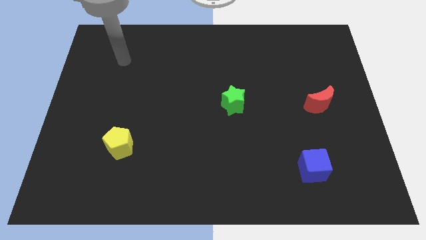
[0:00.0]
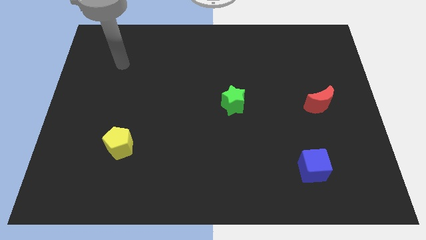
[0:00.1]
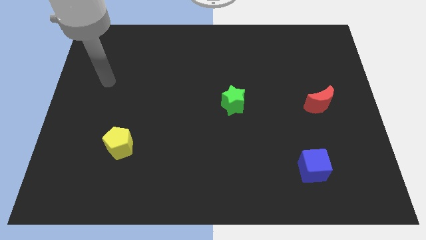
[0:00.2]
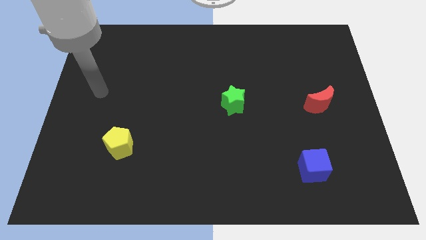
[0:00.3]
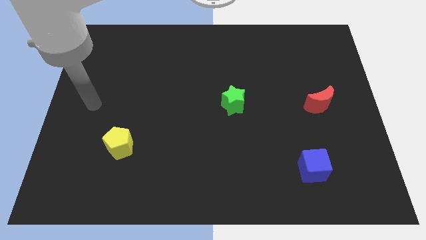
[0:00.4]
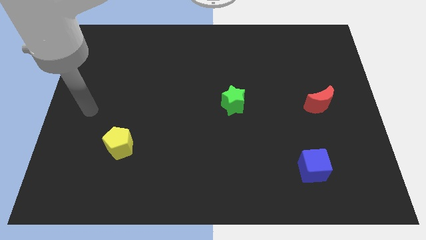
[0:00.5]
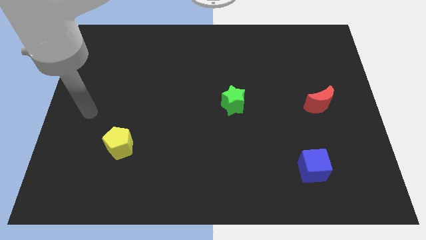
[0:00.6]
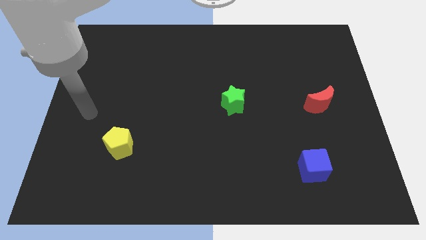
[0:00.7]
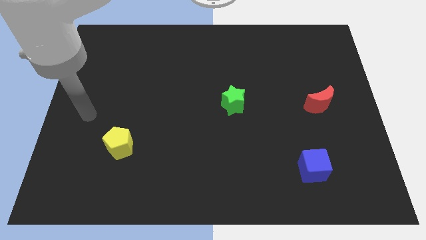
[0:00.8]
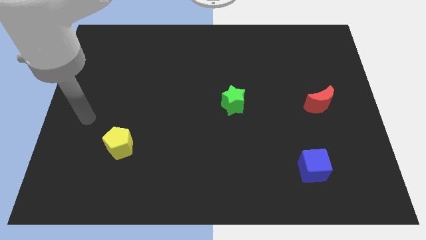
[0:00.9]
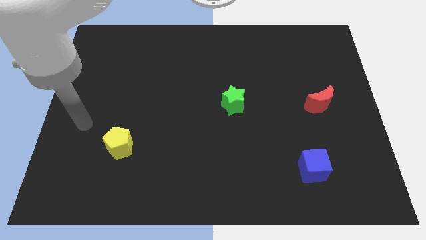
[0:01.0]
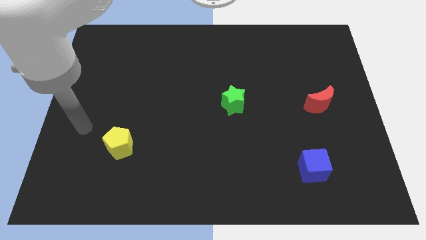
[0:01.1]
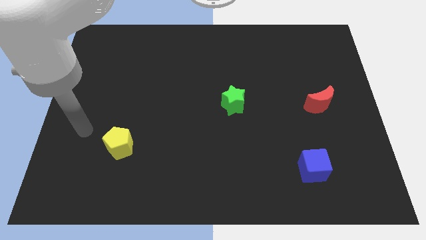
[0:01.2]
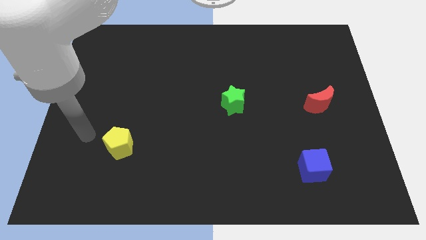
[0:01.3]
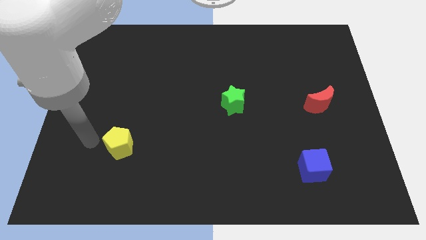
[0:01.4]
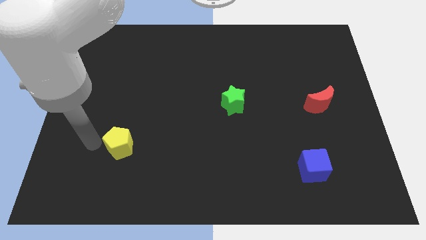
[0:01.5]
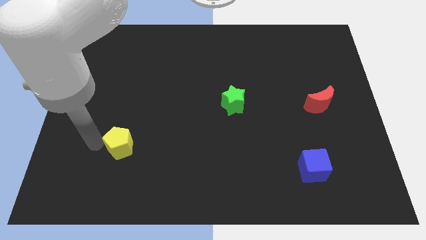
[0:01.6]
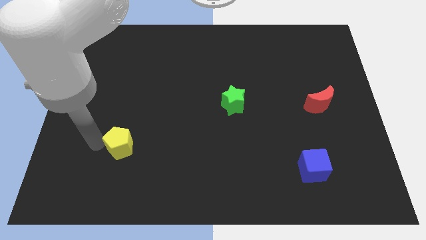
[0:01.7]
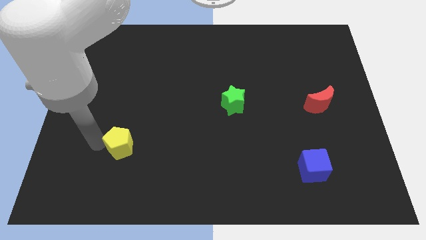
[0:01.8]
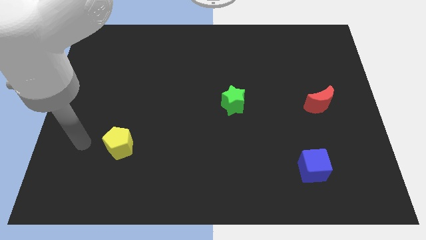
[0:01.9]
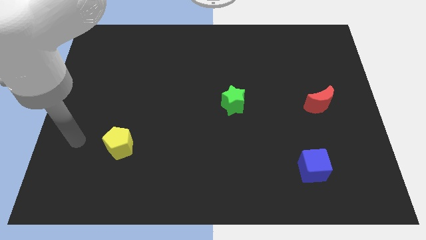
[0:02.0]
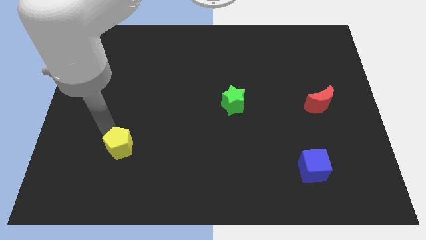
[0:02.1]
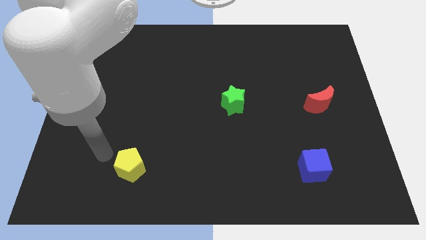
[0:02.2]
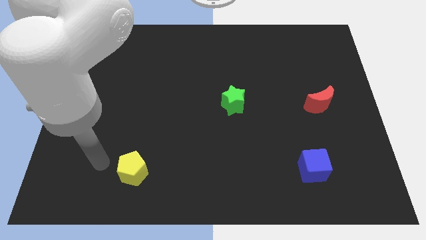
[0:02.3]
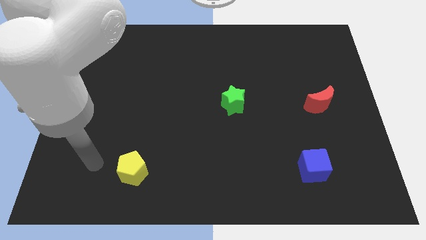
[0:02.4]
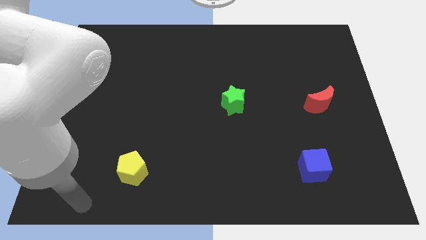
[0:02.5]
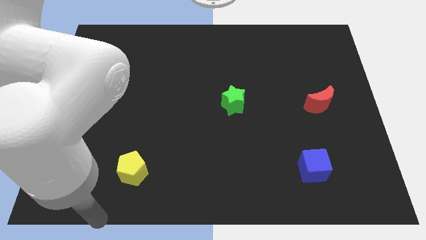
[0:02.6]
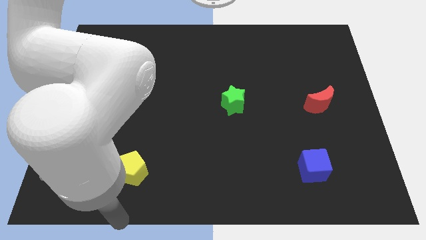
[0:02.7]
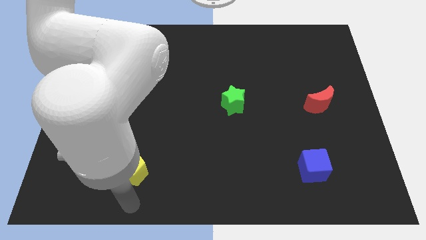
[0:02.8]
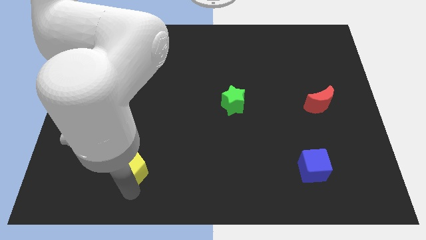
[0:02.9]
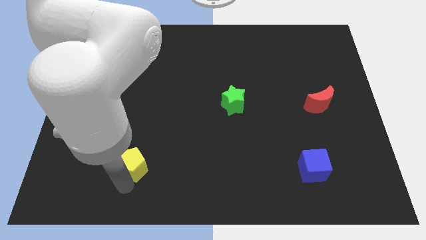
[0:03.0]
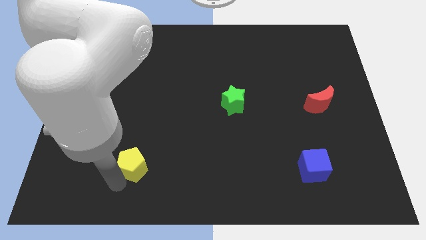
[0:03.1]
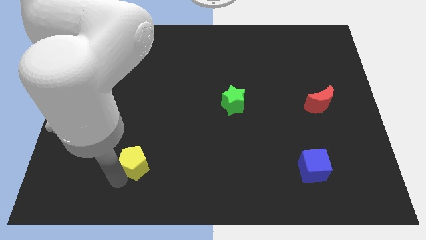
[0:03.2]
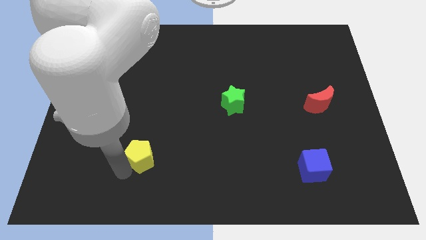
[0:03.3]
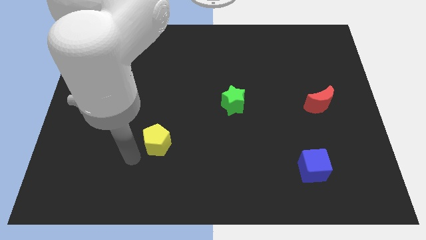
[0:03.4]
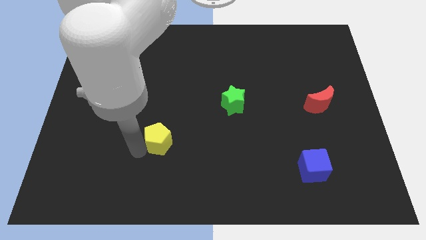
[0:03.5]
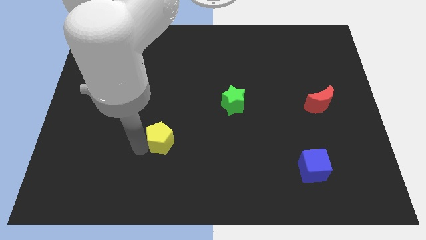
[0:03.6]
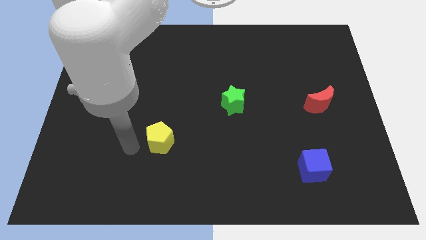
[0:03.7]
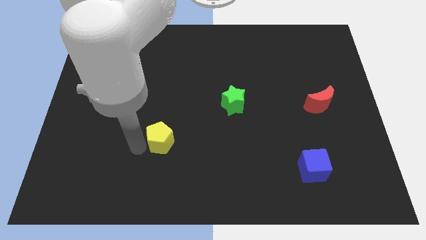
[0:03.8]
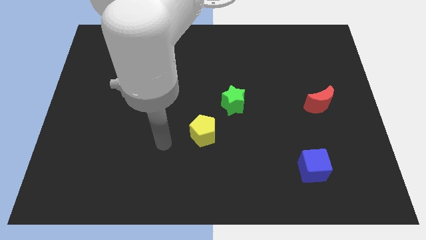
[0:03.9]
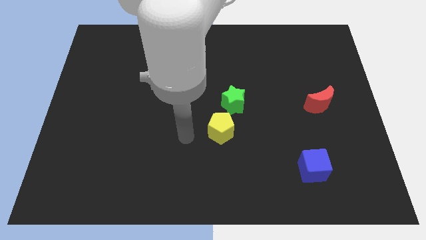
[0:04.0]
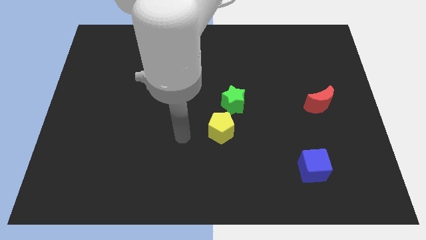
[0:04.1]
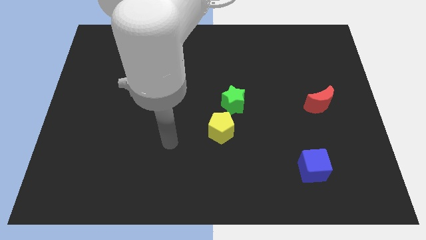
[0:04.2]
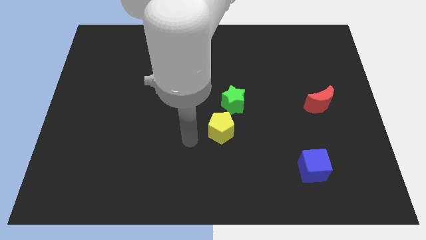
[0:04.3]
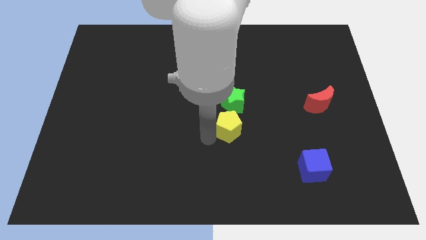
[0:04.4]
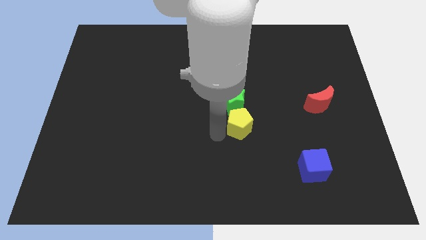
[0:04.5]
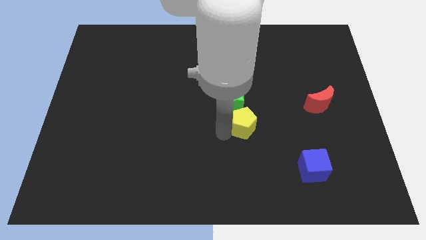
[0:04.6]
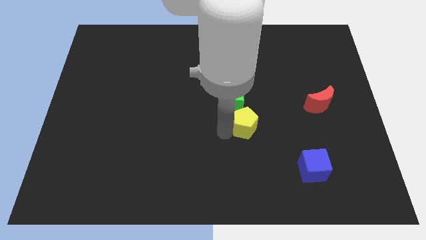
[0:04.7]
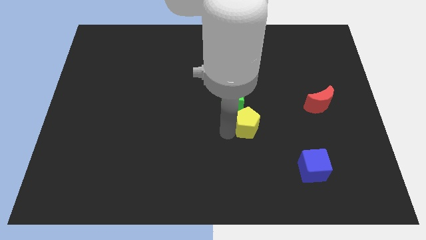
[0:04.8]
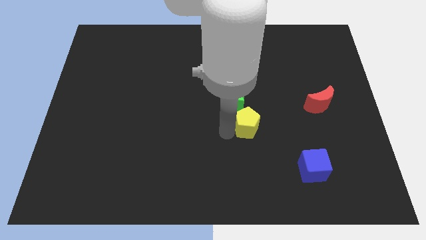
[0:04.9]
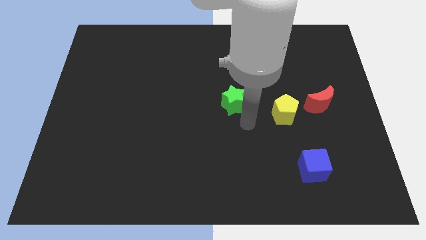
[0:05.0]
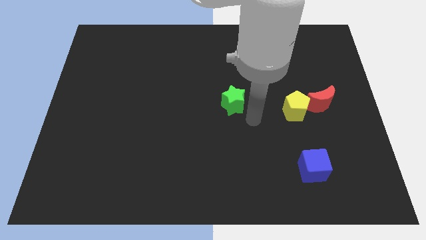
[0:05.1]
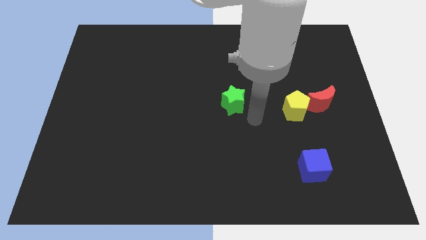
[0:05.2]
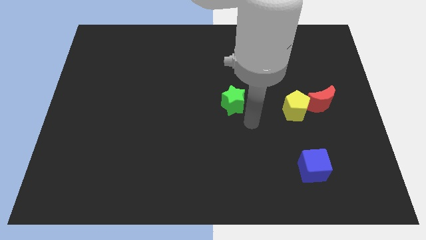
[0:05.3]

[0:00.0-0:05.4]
push the yellow block close to the red block

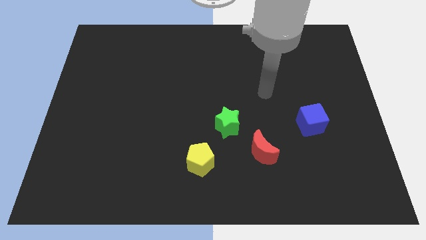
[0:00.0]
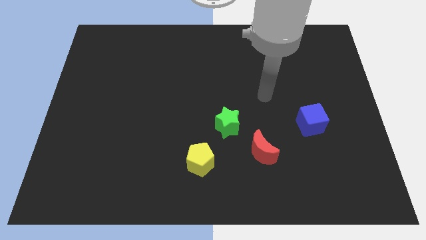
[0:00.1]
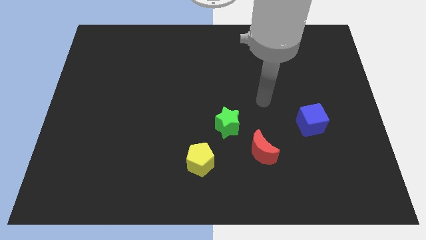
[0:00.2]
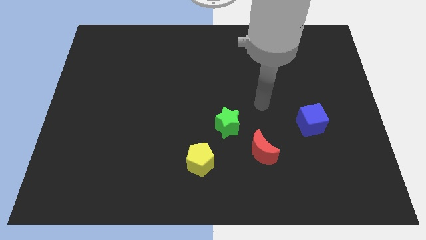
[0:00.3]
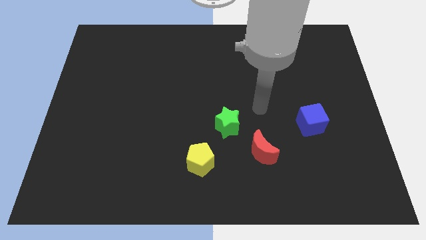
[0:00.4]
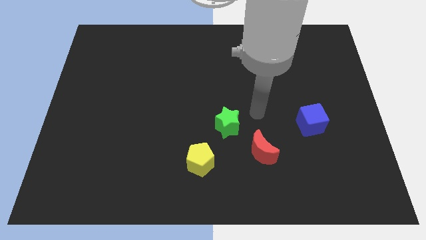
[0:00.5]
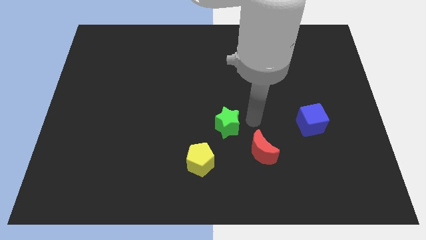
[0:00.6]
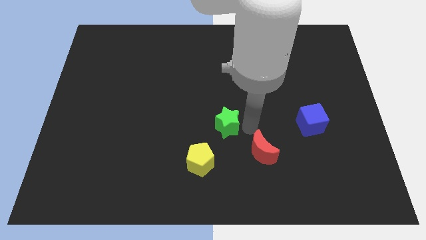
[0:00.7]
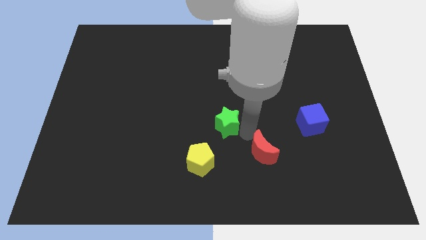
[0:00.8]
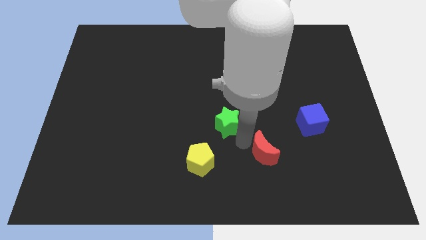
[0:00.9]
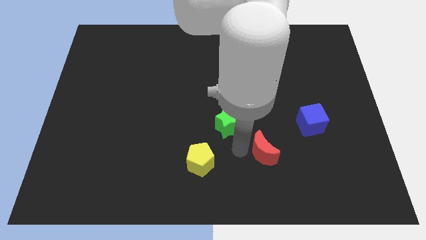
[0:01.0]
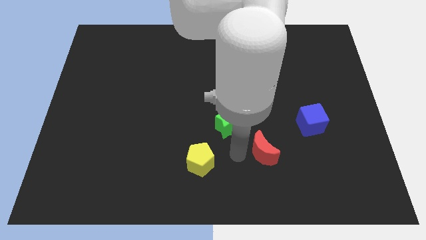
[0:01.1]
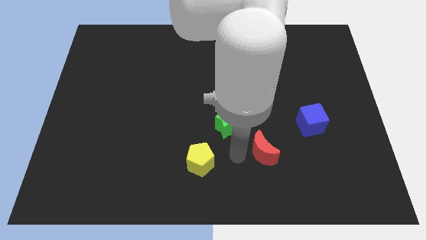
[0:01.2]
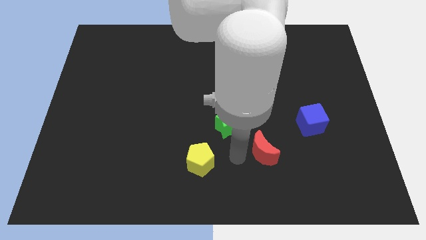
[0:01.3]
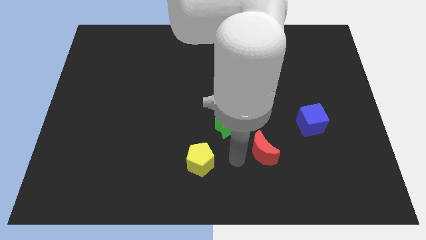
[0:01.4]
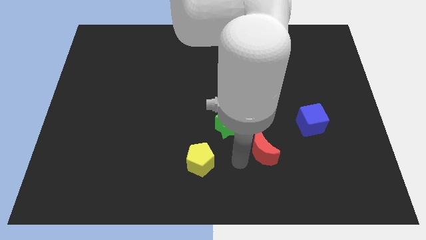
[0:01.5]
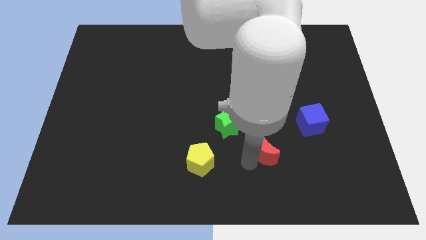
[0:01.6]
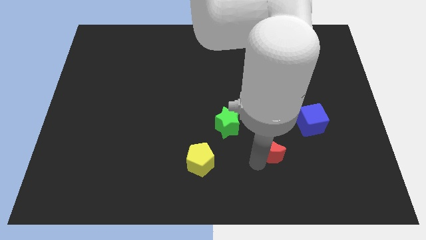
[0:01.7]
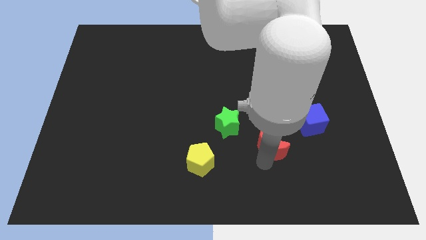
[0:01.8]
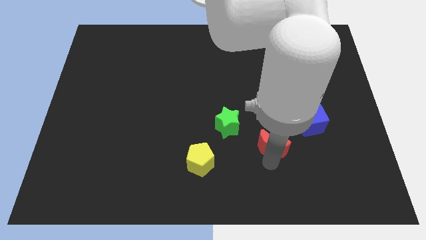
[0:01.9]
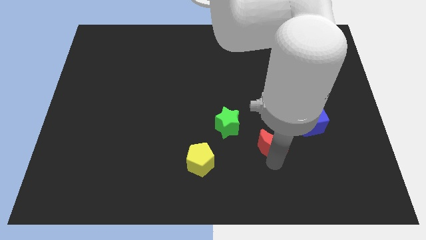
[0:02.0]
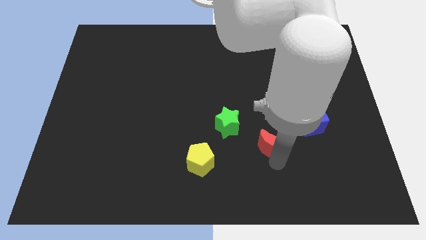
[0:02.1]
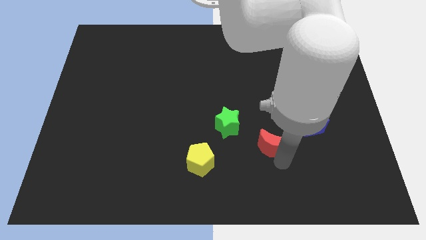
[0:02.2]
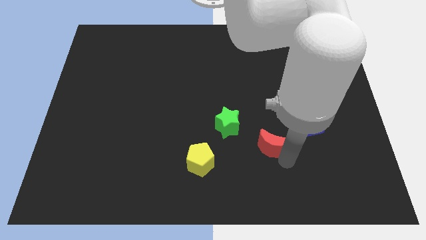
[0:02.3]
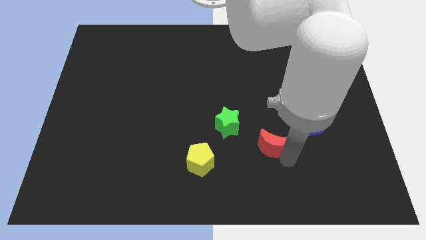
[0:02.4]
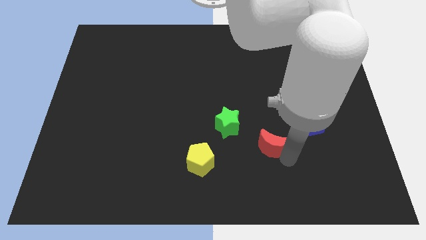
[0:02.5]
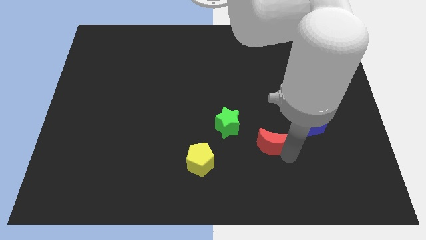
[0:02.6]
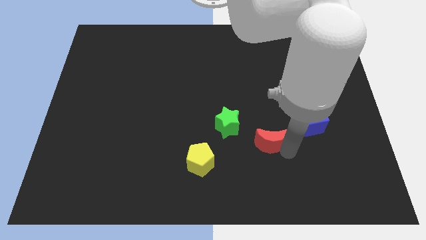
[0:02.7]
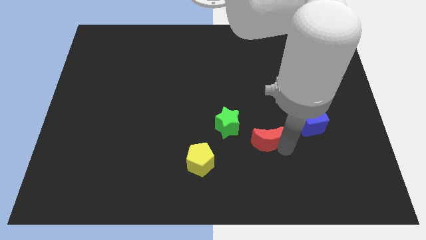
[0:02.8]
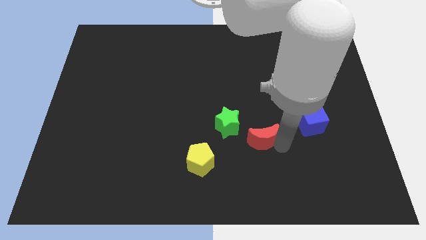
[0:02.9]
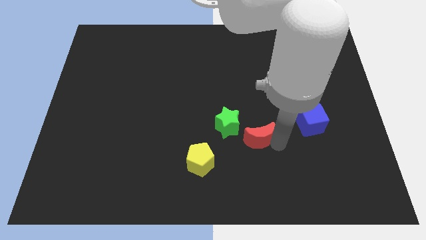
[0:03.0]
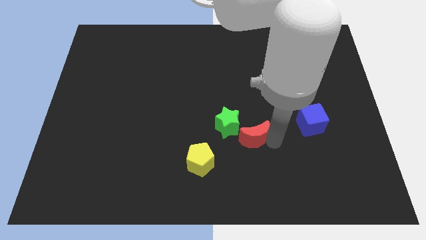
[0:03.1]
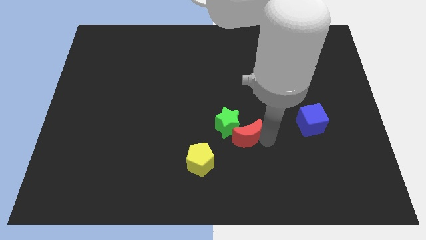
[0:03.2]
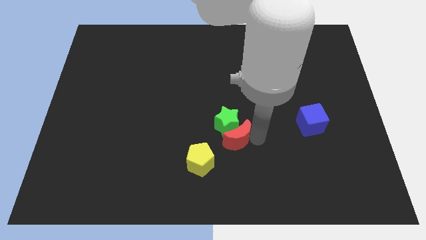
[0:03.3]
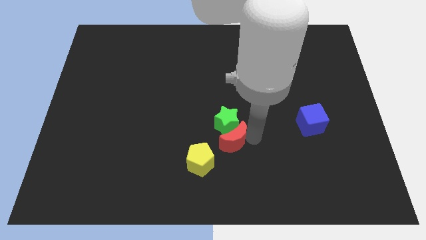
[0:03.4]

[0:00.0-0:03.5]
put the red block next to the star
